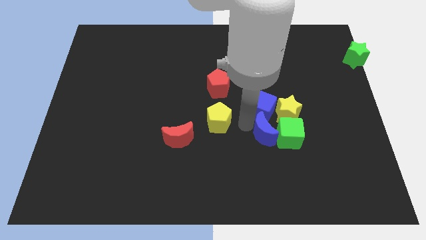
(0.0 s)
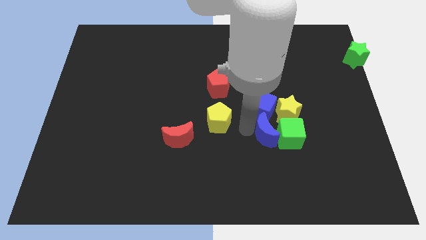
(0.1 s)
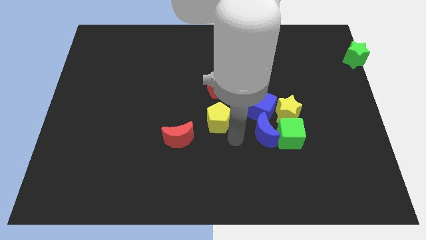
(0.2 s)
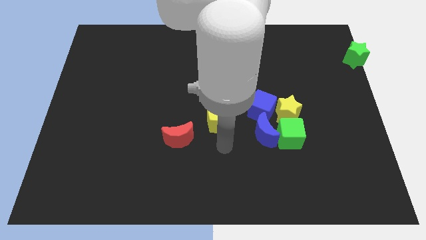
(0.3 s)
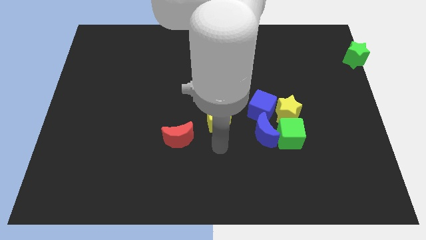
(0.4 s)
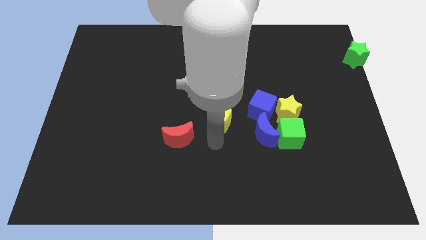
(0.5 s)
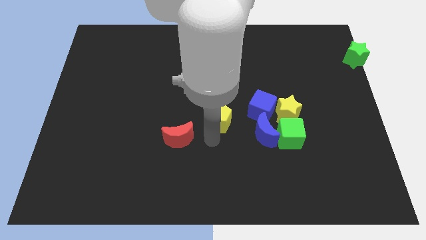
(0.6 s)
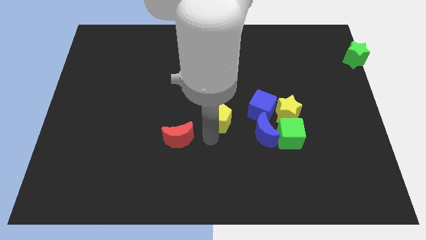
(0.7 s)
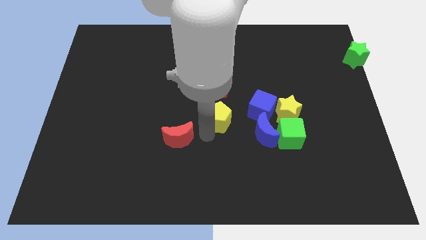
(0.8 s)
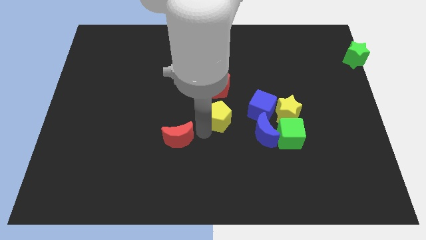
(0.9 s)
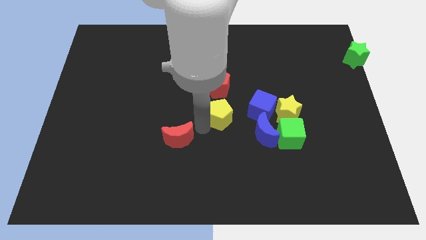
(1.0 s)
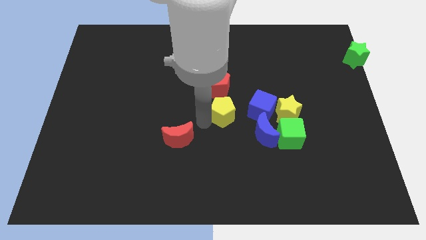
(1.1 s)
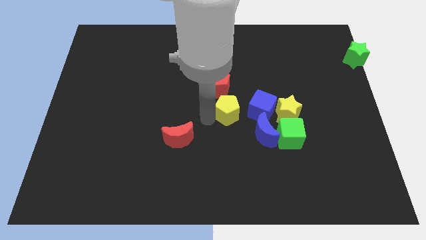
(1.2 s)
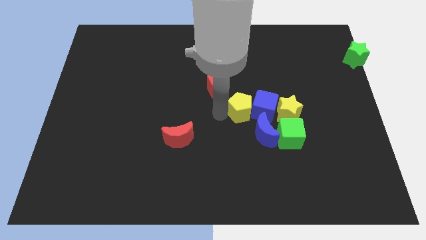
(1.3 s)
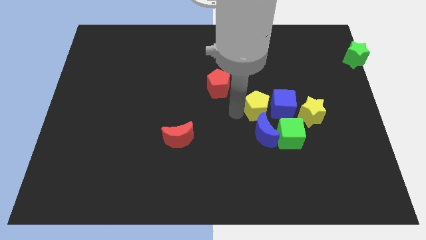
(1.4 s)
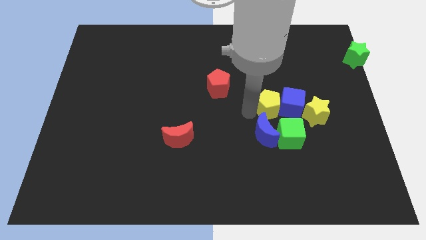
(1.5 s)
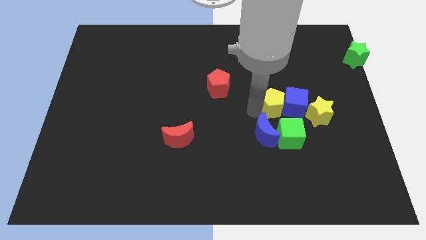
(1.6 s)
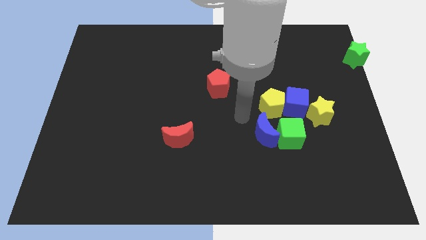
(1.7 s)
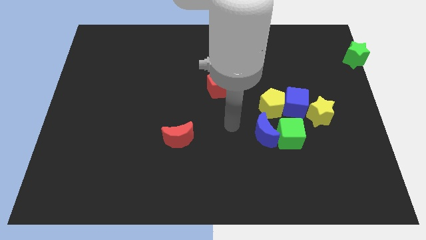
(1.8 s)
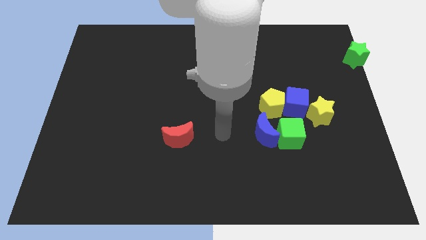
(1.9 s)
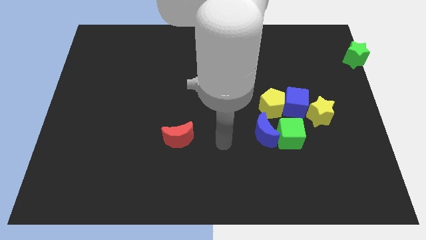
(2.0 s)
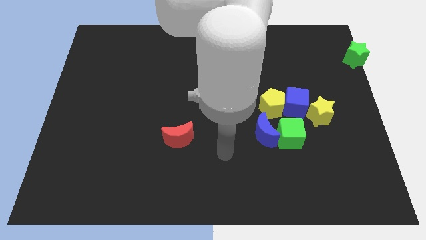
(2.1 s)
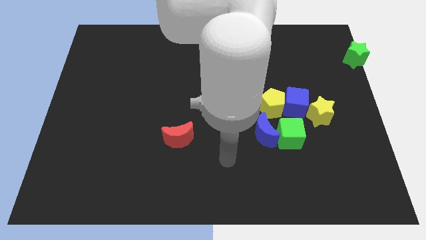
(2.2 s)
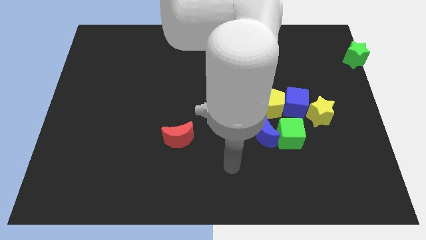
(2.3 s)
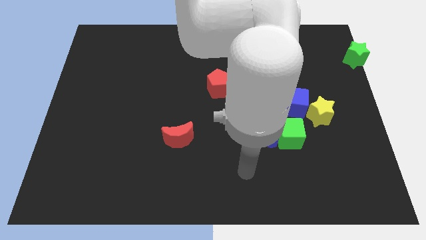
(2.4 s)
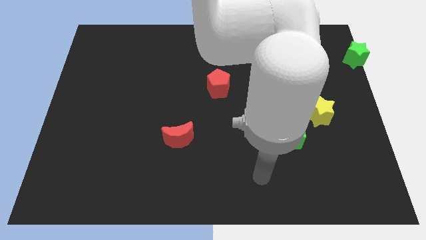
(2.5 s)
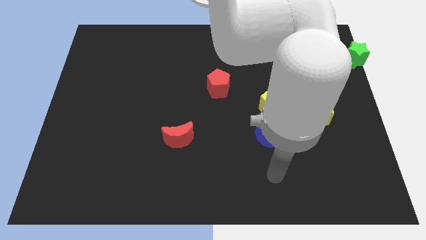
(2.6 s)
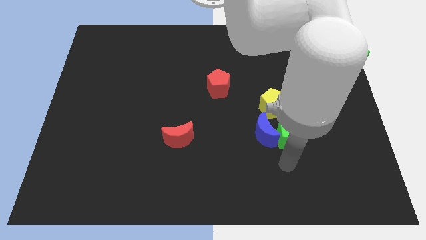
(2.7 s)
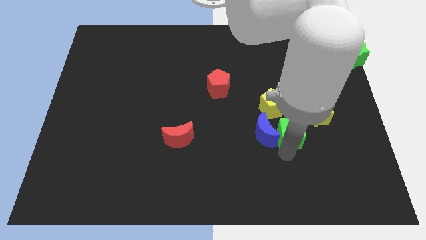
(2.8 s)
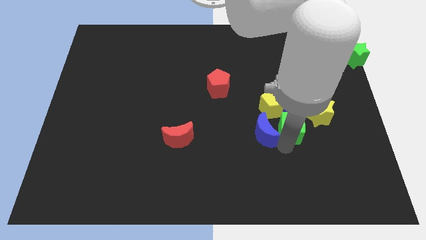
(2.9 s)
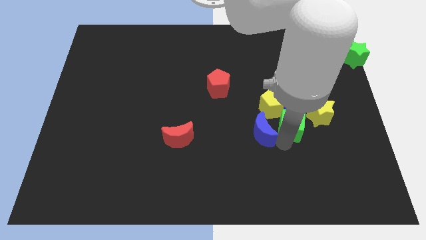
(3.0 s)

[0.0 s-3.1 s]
push the yellow pentagon into the group of blocks

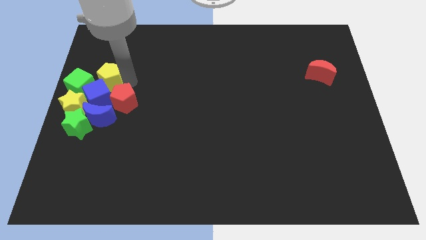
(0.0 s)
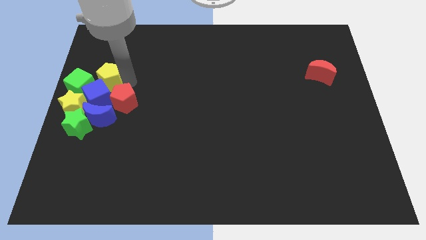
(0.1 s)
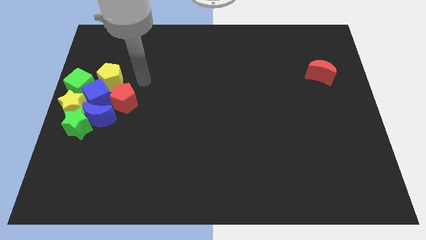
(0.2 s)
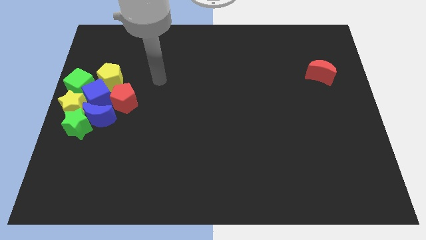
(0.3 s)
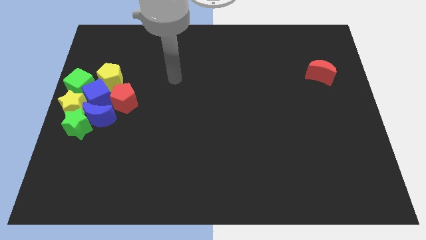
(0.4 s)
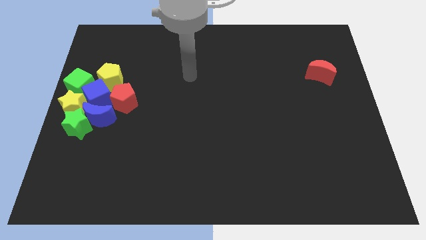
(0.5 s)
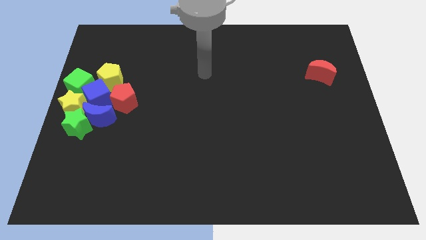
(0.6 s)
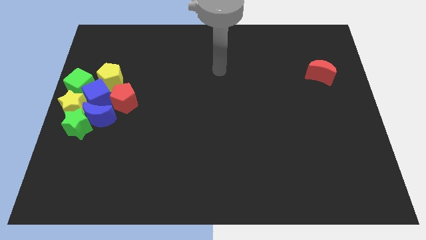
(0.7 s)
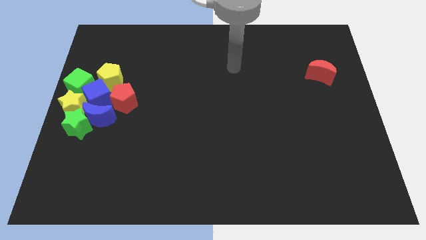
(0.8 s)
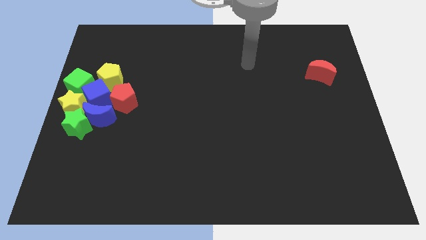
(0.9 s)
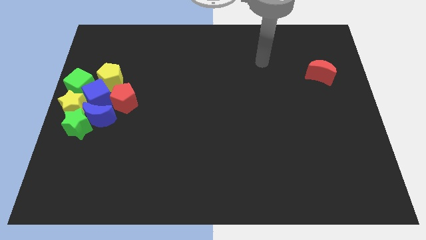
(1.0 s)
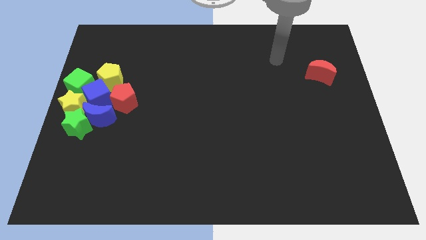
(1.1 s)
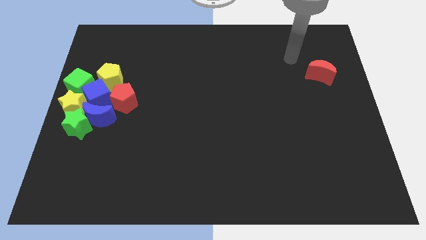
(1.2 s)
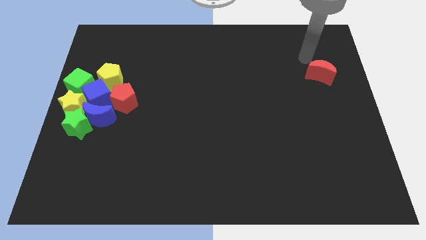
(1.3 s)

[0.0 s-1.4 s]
move the arm away from the yellow pentagon

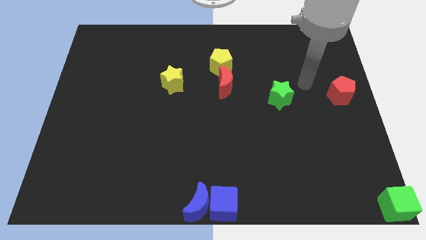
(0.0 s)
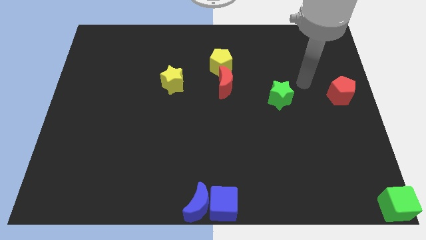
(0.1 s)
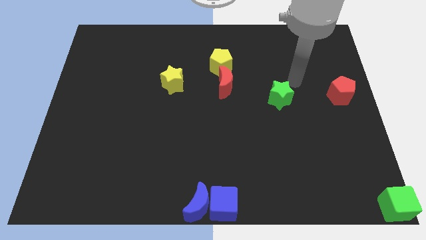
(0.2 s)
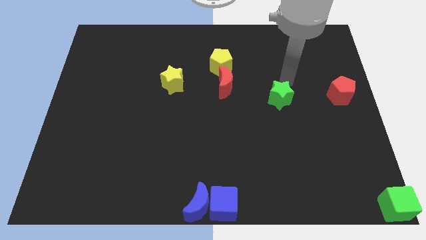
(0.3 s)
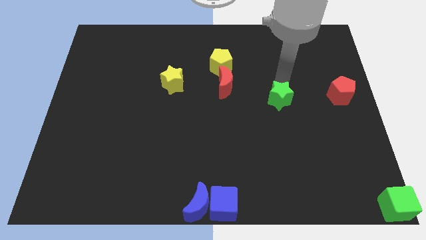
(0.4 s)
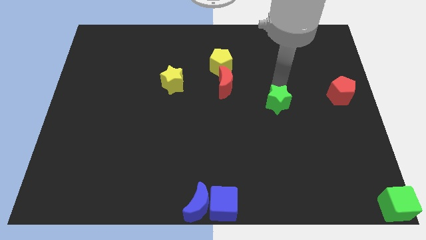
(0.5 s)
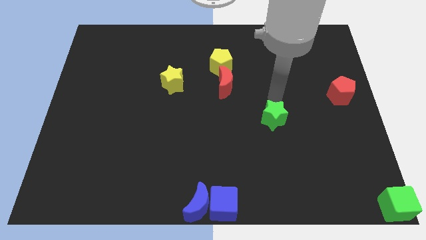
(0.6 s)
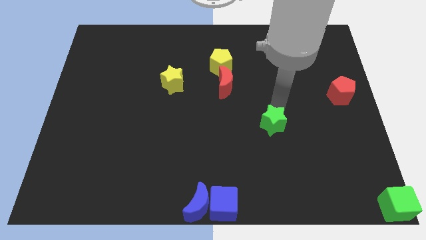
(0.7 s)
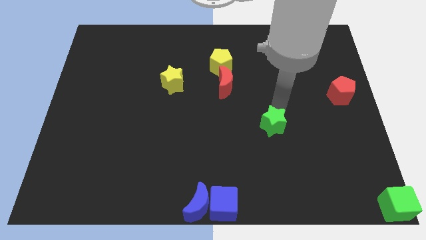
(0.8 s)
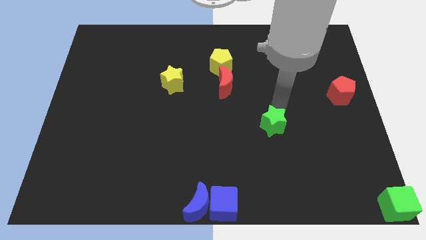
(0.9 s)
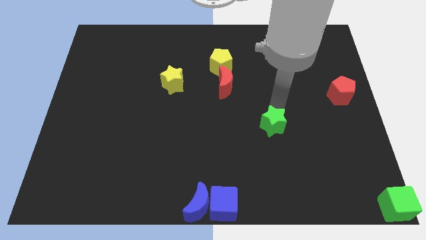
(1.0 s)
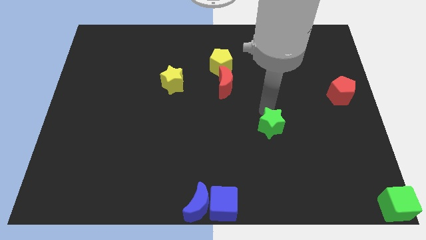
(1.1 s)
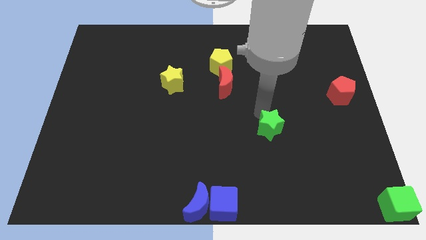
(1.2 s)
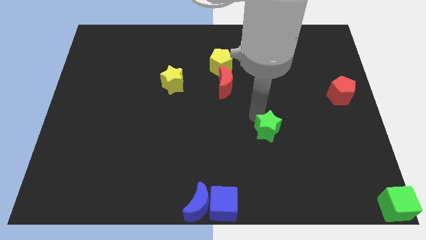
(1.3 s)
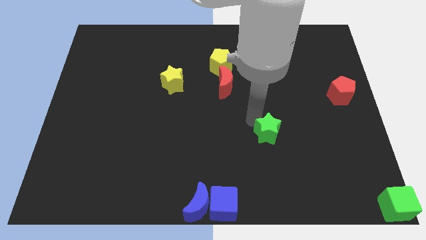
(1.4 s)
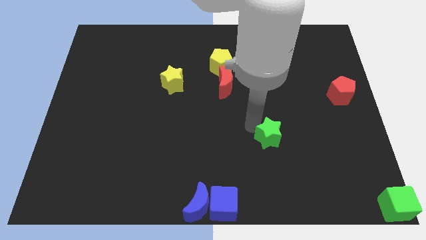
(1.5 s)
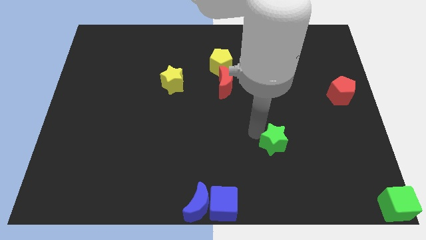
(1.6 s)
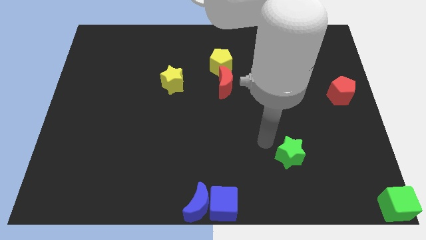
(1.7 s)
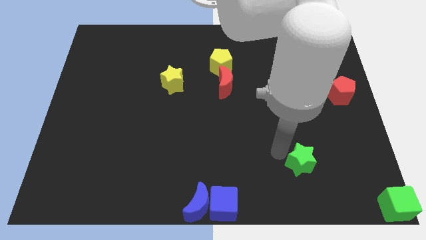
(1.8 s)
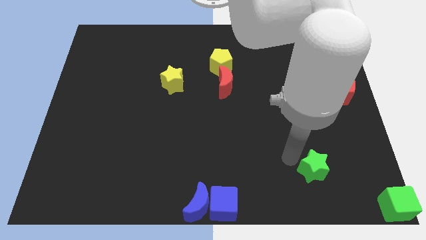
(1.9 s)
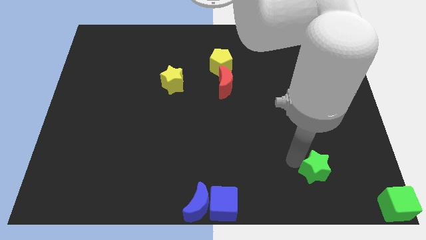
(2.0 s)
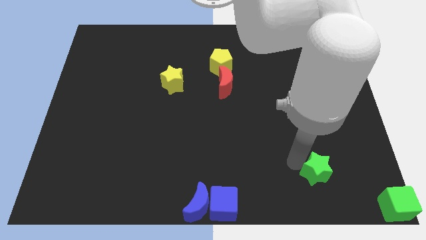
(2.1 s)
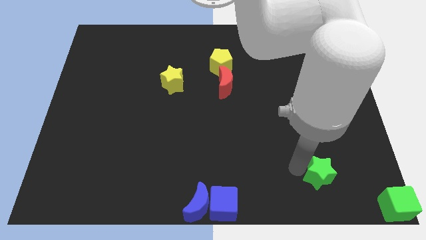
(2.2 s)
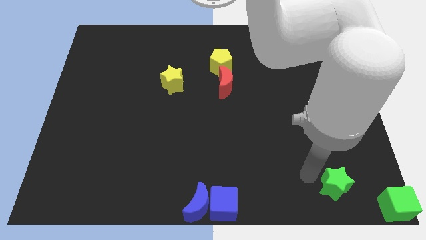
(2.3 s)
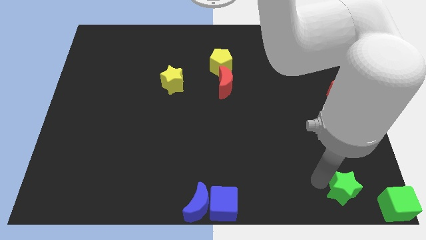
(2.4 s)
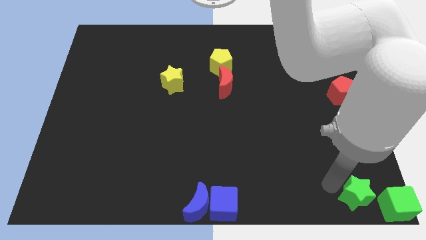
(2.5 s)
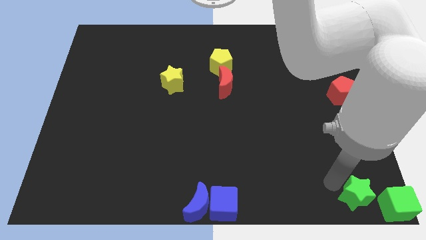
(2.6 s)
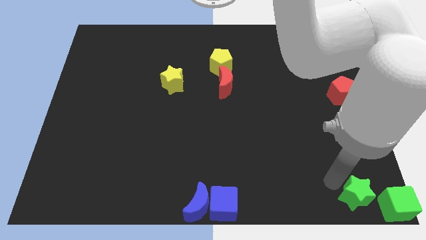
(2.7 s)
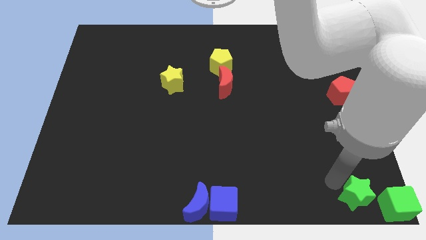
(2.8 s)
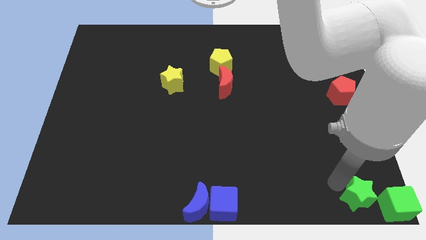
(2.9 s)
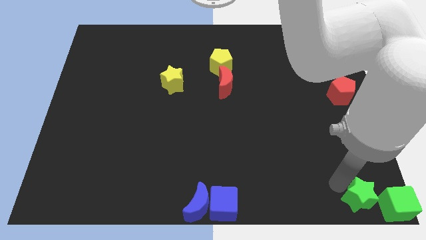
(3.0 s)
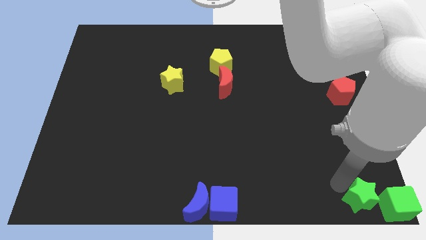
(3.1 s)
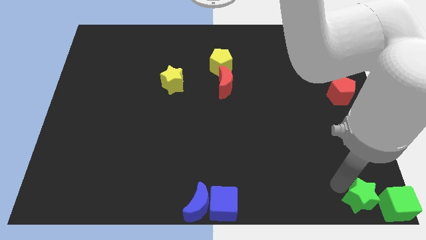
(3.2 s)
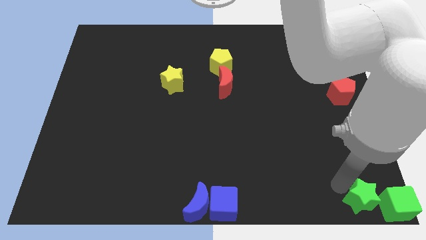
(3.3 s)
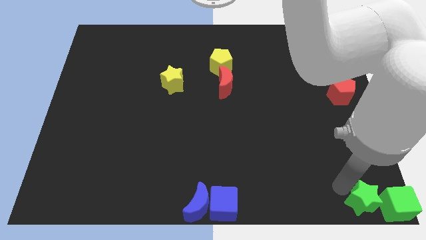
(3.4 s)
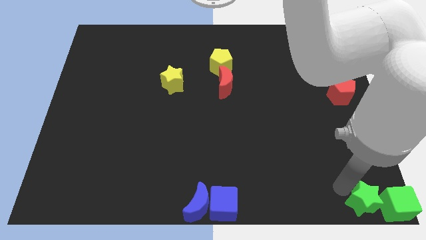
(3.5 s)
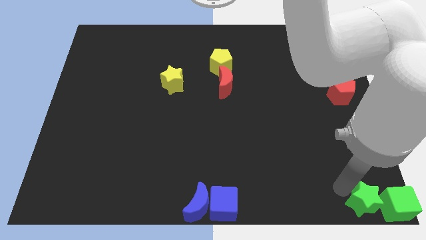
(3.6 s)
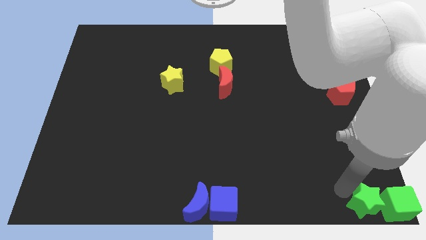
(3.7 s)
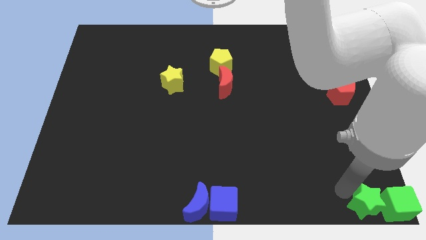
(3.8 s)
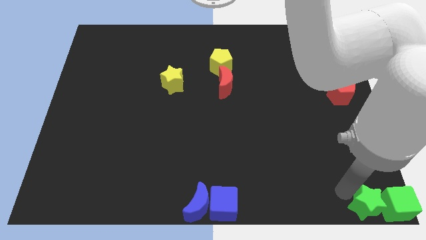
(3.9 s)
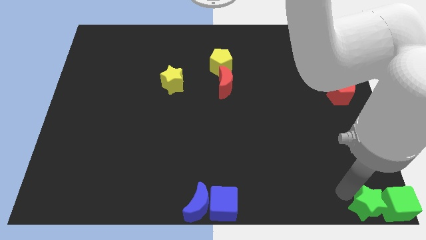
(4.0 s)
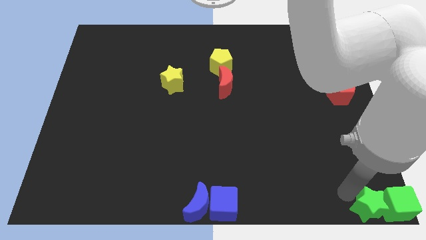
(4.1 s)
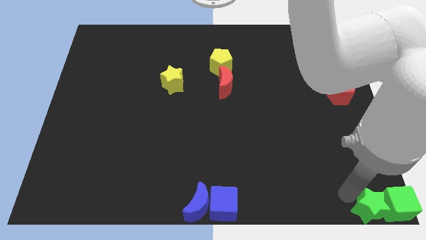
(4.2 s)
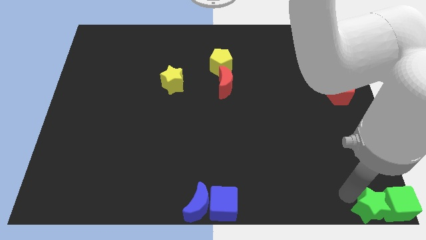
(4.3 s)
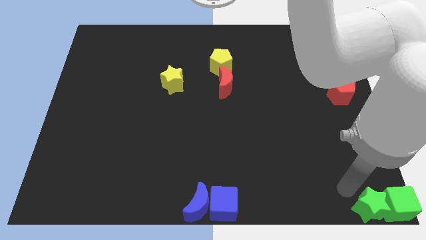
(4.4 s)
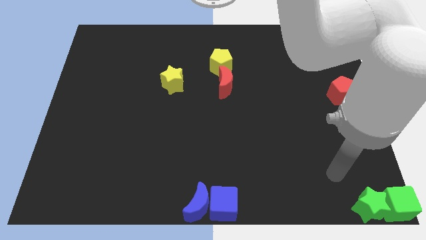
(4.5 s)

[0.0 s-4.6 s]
move the green star to the left side of the green cube
